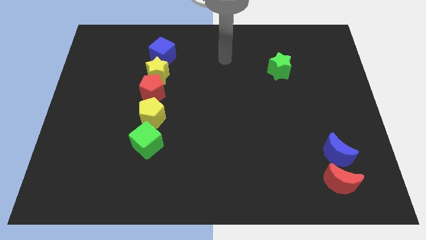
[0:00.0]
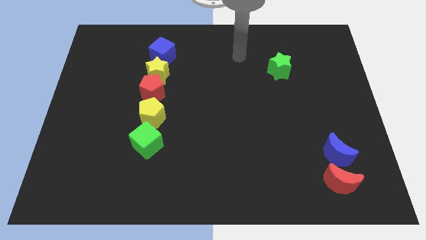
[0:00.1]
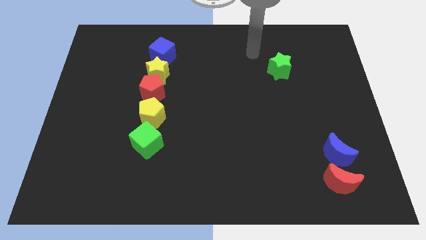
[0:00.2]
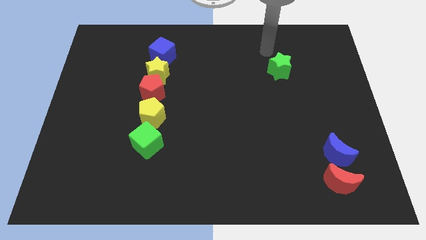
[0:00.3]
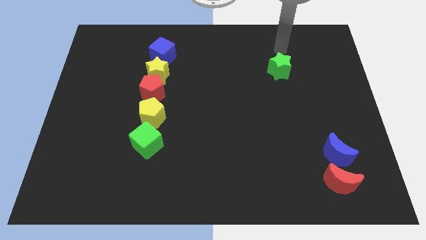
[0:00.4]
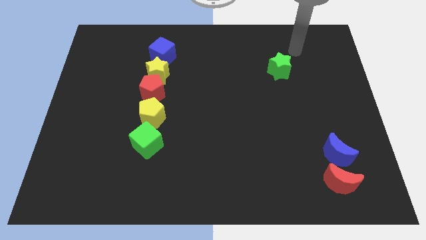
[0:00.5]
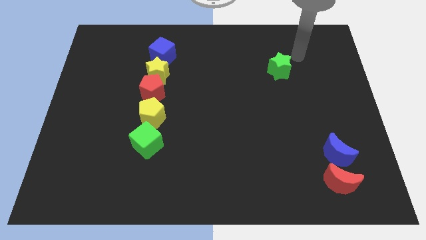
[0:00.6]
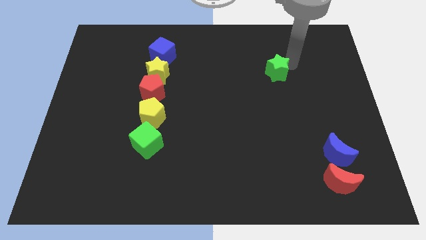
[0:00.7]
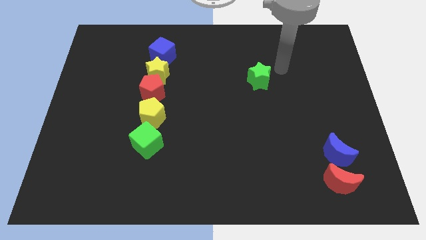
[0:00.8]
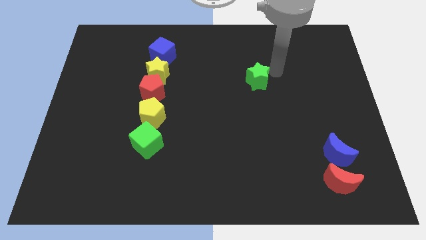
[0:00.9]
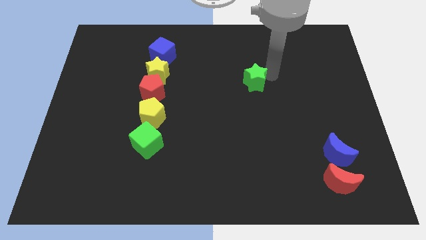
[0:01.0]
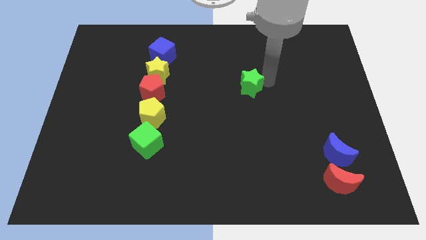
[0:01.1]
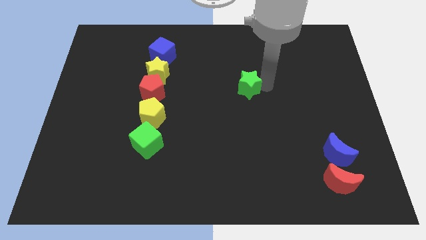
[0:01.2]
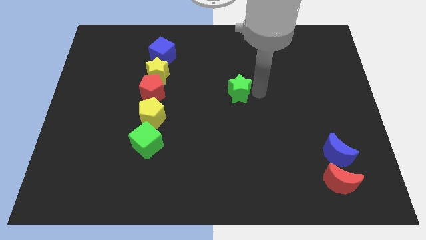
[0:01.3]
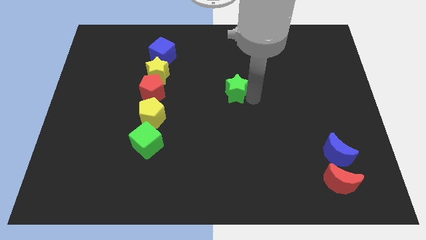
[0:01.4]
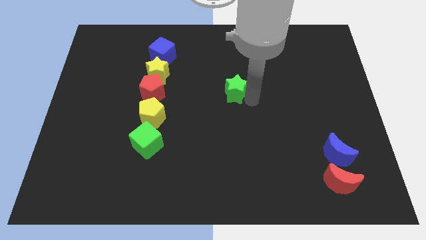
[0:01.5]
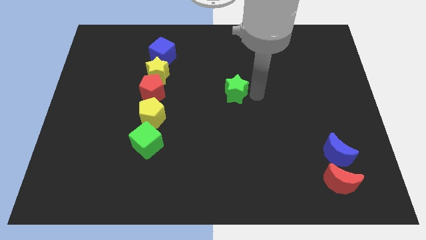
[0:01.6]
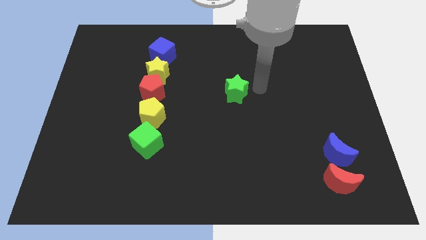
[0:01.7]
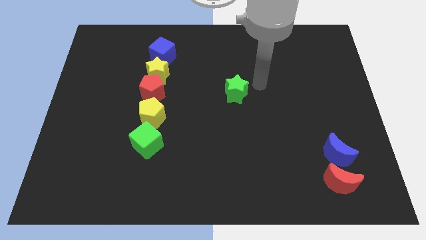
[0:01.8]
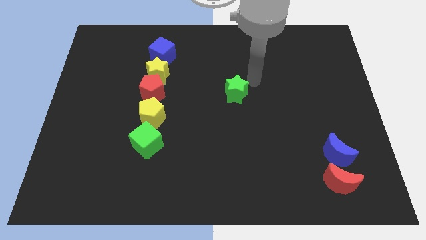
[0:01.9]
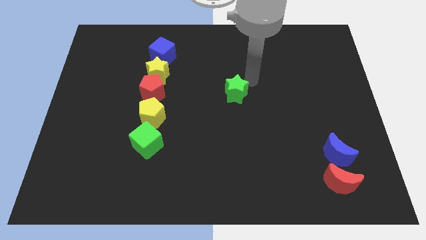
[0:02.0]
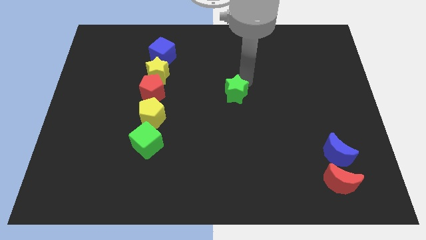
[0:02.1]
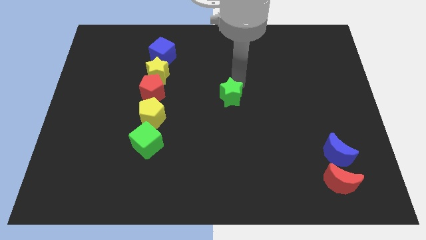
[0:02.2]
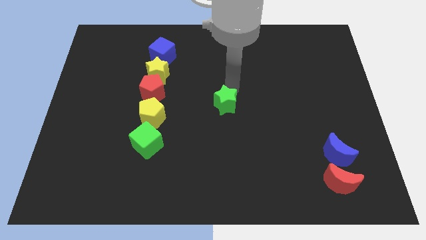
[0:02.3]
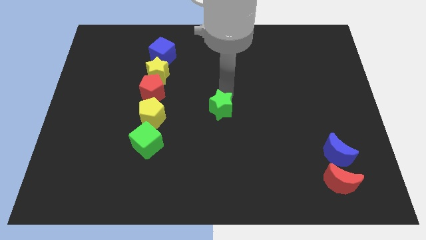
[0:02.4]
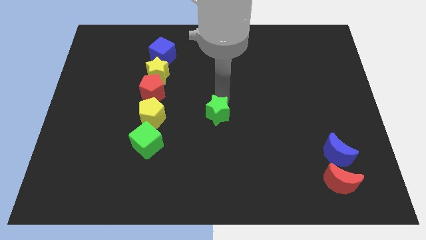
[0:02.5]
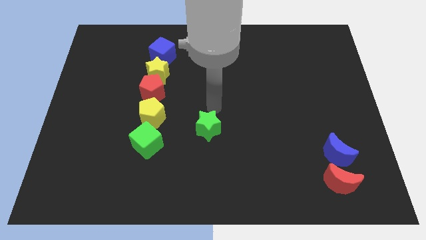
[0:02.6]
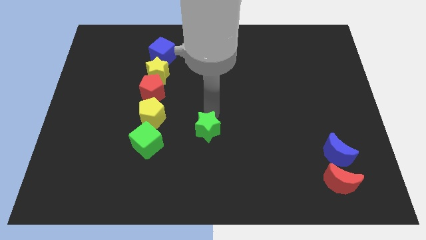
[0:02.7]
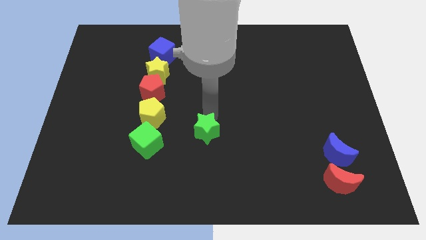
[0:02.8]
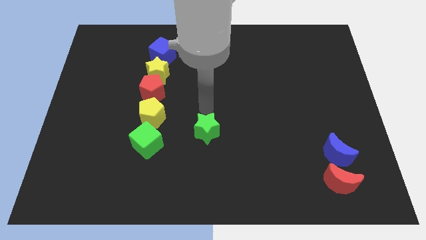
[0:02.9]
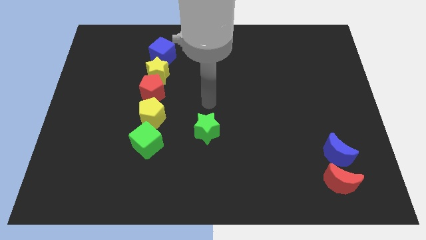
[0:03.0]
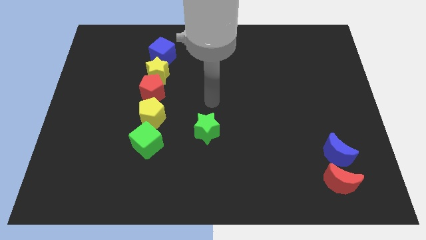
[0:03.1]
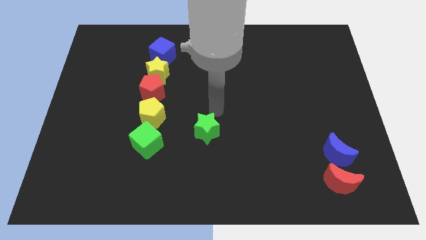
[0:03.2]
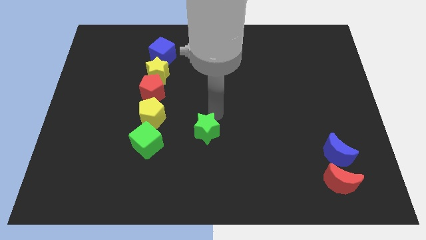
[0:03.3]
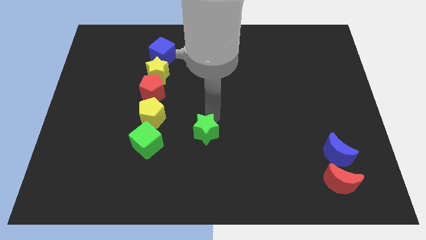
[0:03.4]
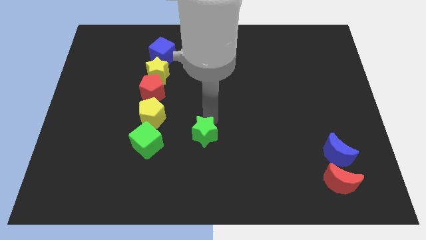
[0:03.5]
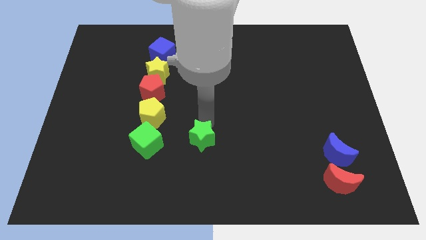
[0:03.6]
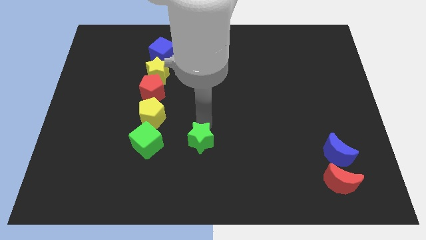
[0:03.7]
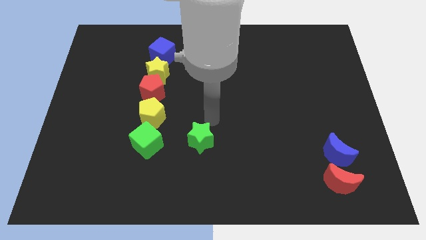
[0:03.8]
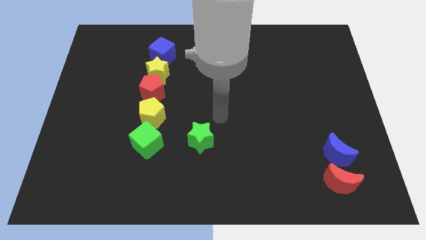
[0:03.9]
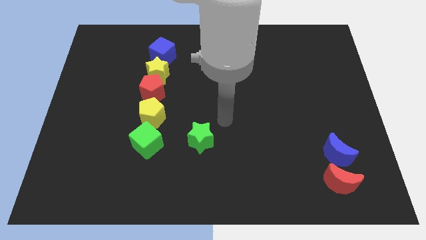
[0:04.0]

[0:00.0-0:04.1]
move the green star to the right side of the green cube

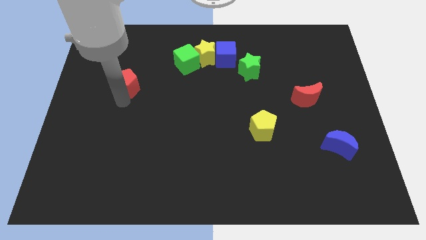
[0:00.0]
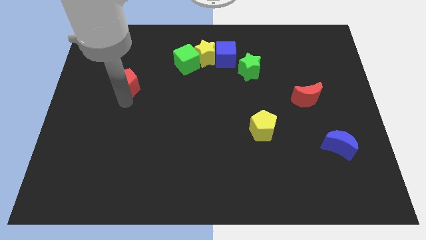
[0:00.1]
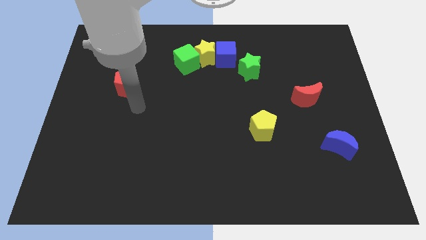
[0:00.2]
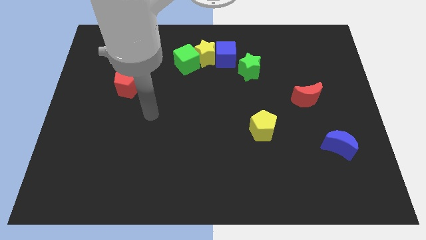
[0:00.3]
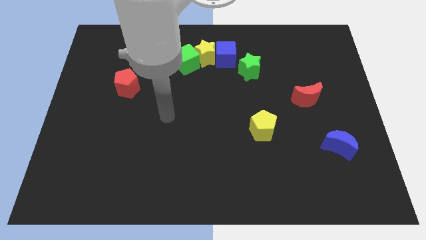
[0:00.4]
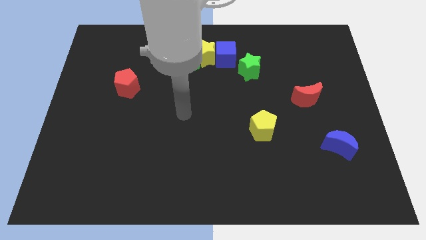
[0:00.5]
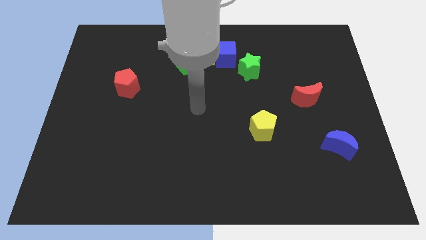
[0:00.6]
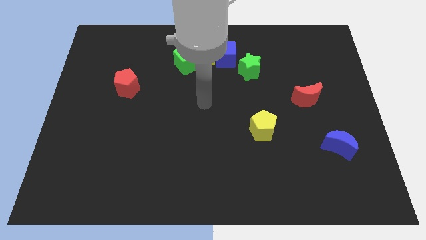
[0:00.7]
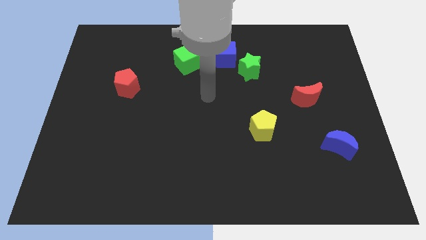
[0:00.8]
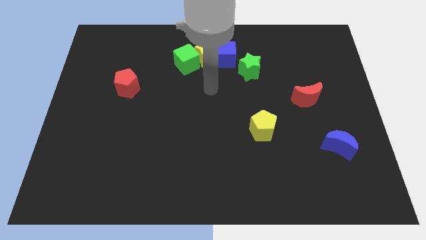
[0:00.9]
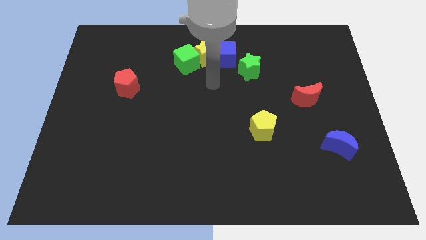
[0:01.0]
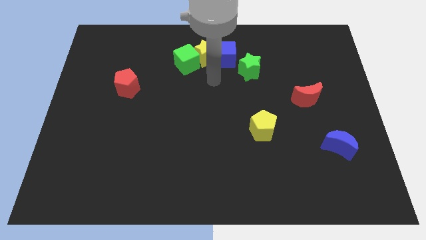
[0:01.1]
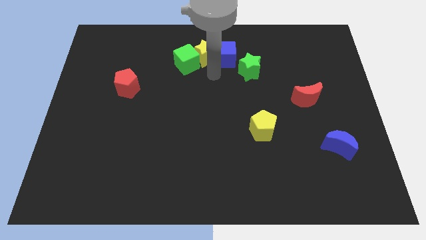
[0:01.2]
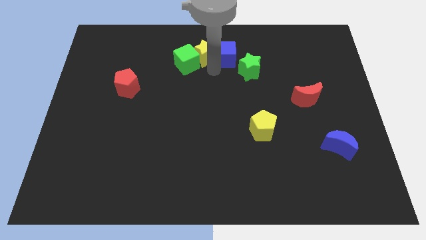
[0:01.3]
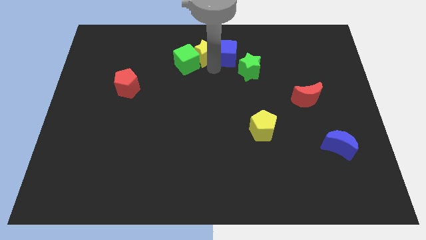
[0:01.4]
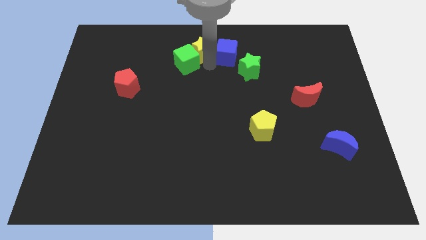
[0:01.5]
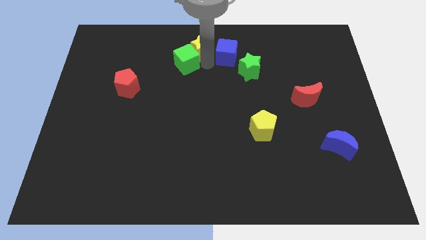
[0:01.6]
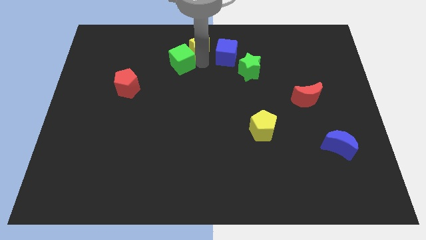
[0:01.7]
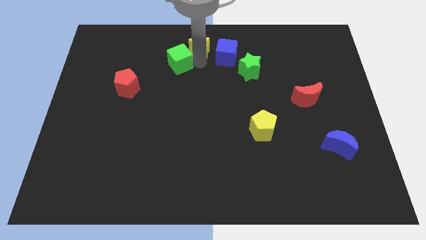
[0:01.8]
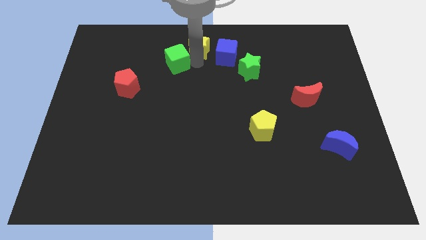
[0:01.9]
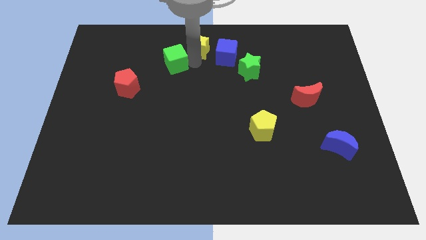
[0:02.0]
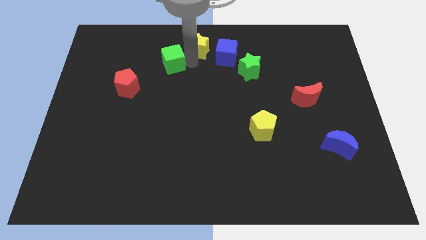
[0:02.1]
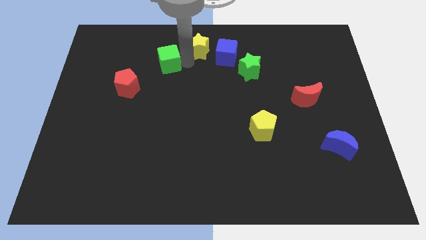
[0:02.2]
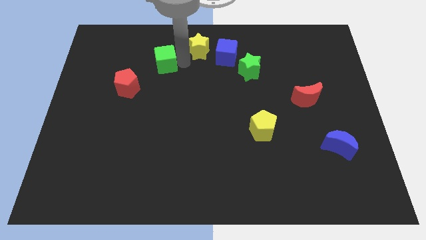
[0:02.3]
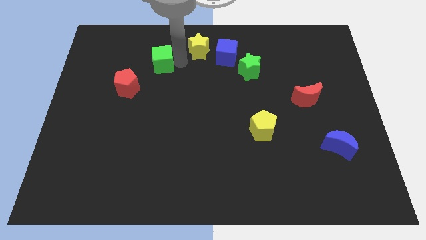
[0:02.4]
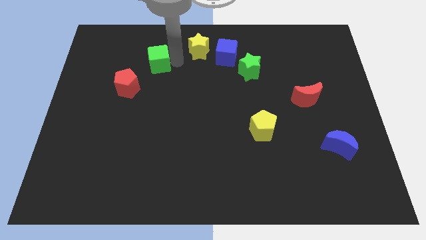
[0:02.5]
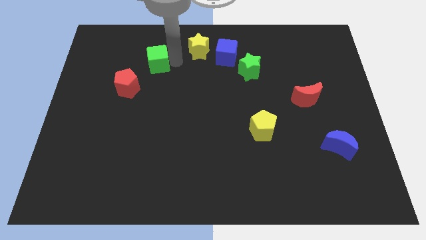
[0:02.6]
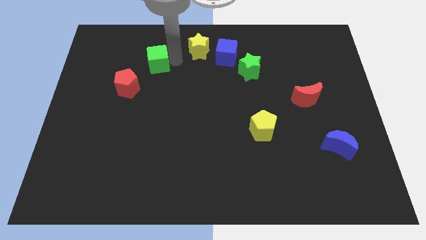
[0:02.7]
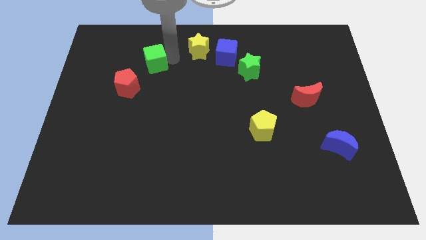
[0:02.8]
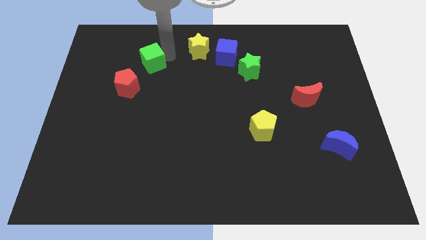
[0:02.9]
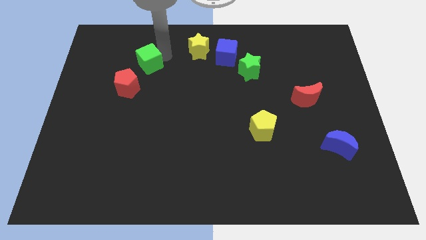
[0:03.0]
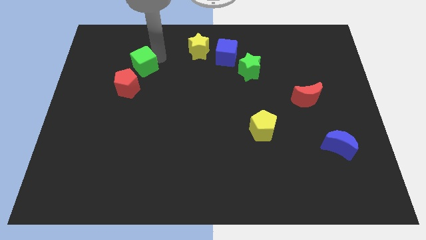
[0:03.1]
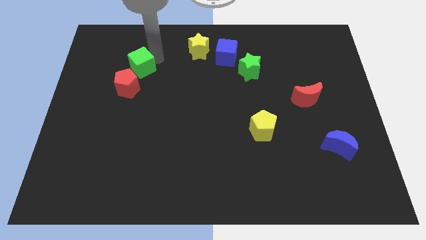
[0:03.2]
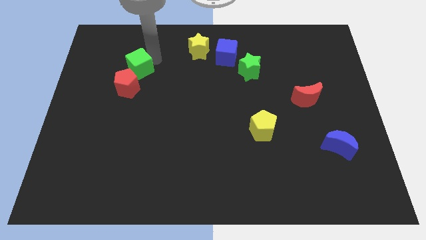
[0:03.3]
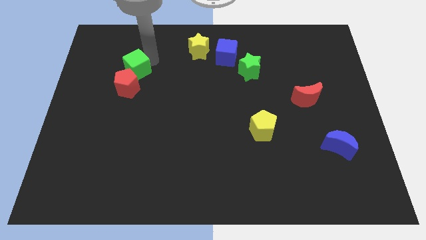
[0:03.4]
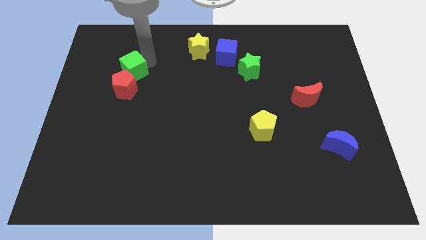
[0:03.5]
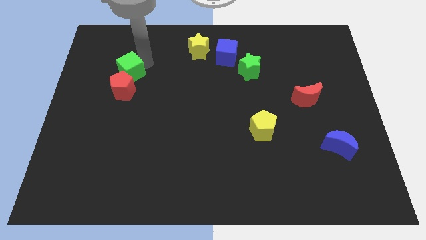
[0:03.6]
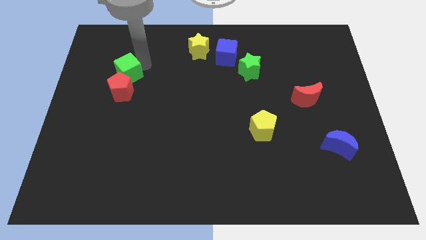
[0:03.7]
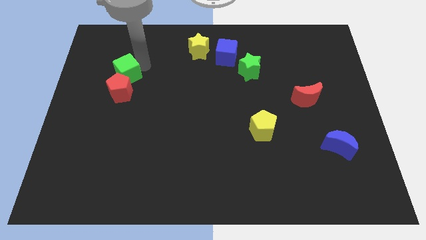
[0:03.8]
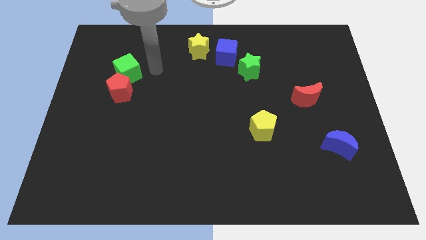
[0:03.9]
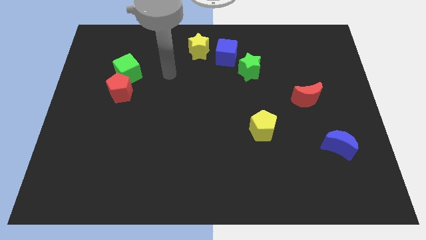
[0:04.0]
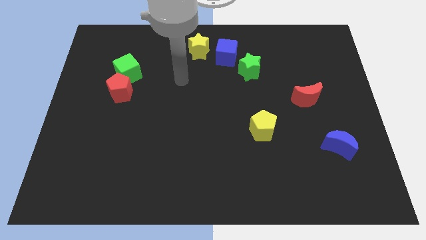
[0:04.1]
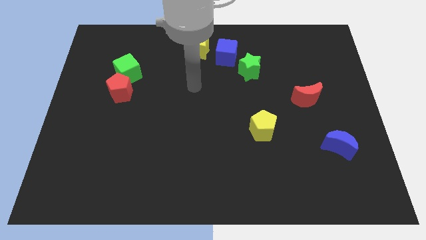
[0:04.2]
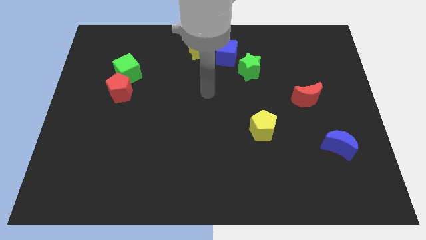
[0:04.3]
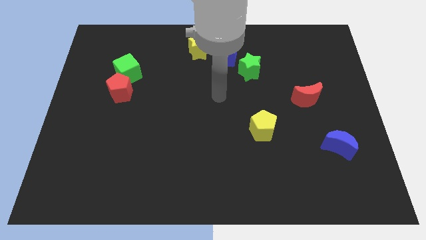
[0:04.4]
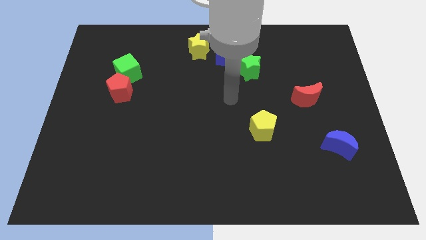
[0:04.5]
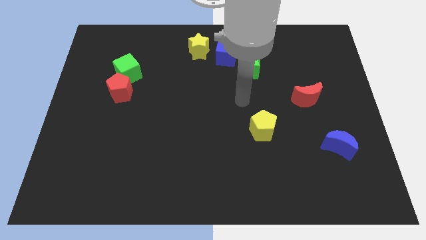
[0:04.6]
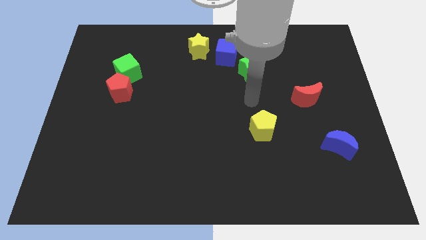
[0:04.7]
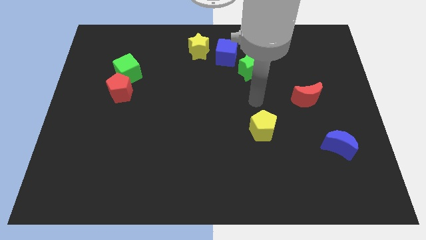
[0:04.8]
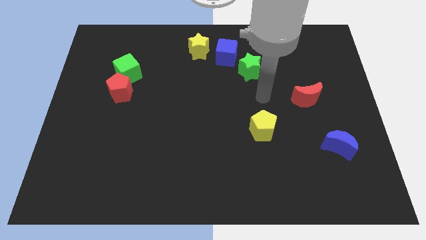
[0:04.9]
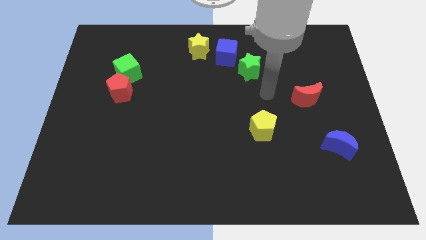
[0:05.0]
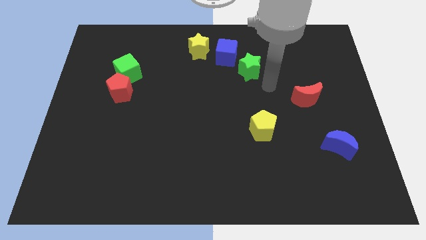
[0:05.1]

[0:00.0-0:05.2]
separate green cube from the group of blocks
